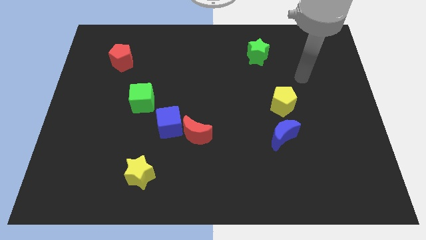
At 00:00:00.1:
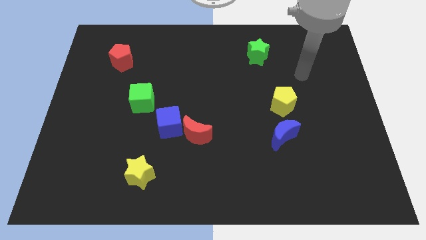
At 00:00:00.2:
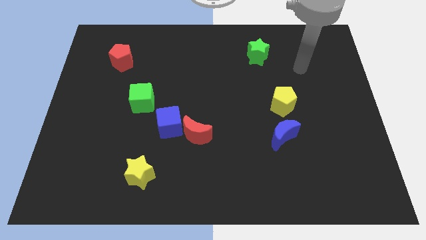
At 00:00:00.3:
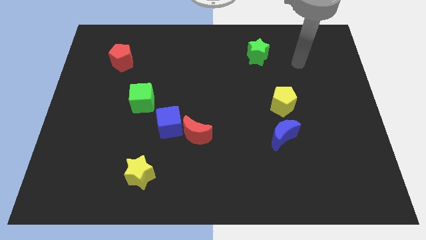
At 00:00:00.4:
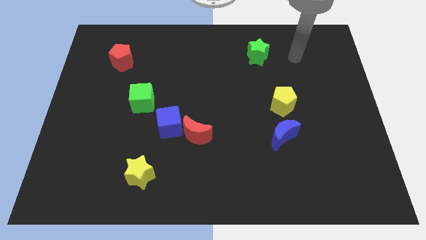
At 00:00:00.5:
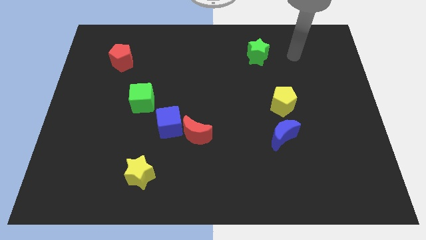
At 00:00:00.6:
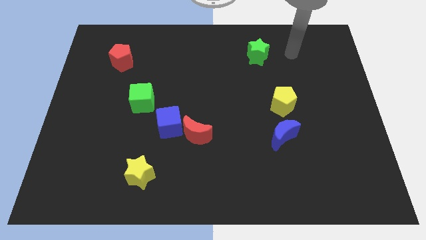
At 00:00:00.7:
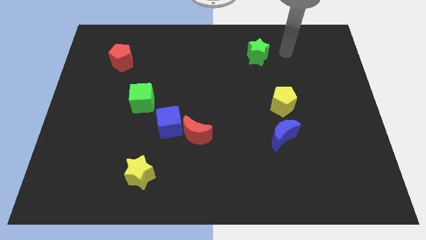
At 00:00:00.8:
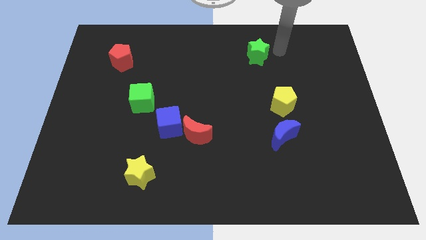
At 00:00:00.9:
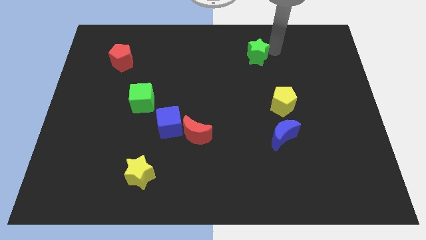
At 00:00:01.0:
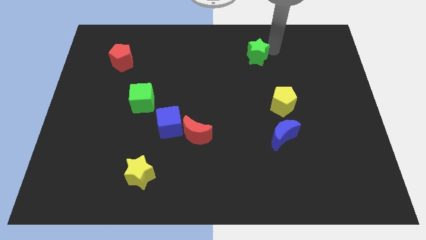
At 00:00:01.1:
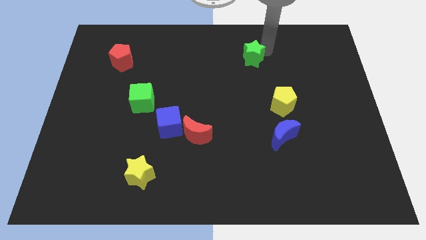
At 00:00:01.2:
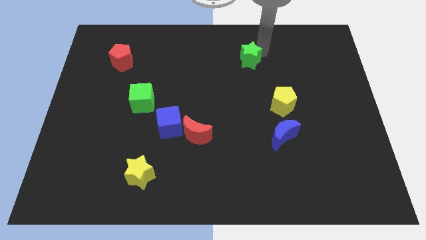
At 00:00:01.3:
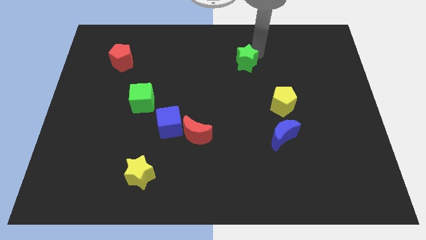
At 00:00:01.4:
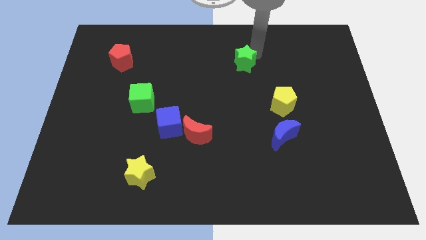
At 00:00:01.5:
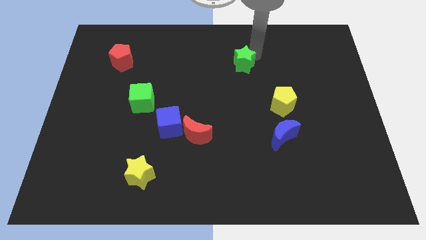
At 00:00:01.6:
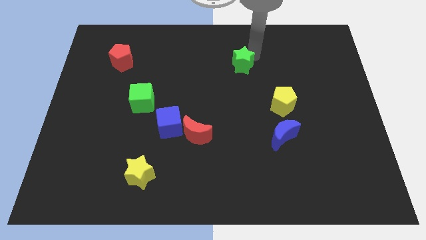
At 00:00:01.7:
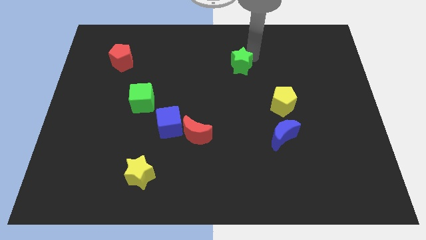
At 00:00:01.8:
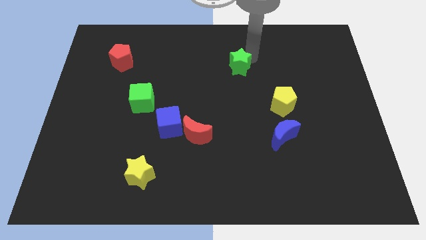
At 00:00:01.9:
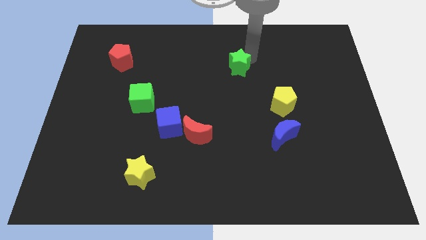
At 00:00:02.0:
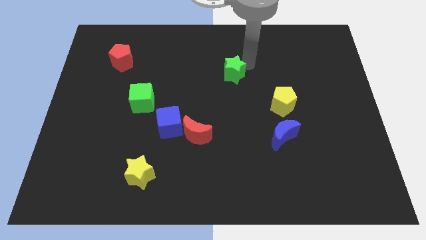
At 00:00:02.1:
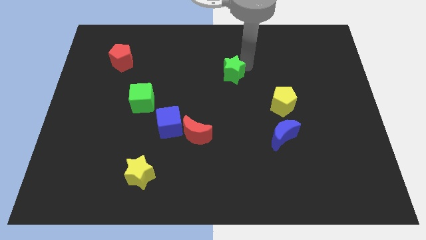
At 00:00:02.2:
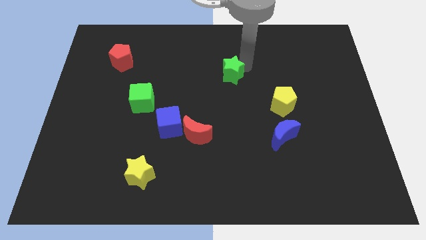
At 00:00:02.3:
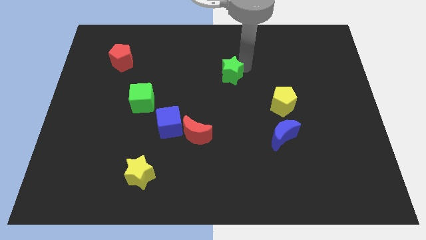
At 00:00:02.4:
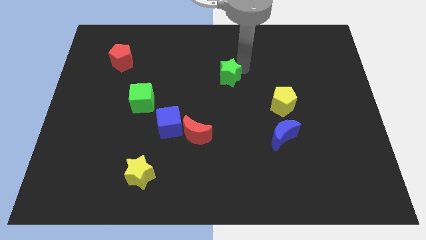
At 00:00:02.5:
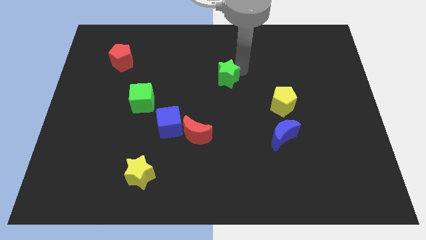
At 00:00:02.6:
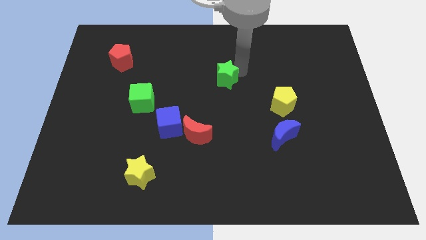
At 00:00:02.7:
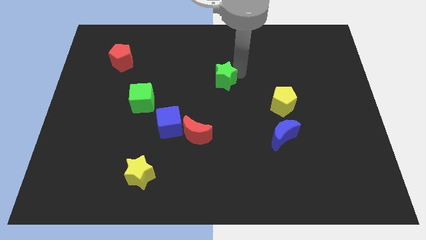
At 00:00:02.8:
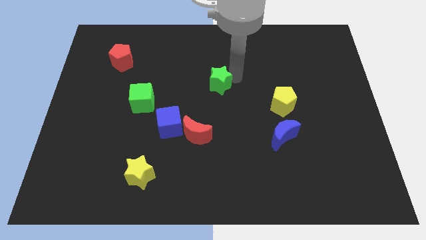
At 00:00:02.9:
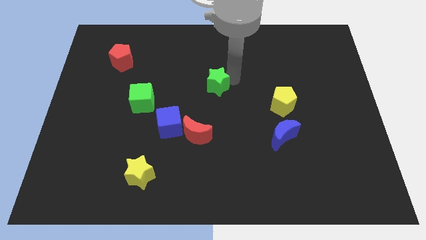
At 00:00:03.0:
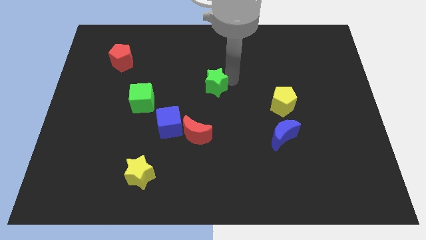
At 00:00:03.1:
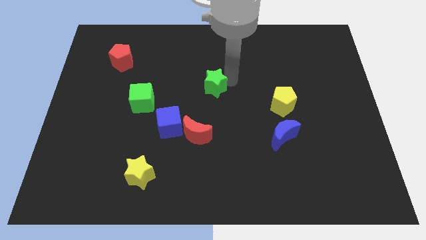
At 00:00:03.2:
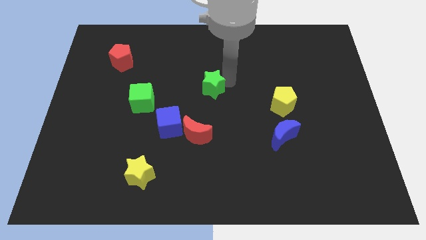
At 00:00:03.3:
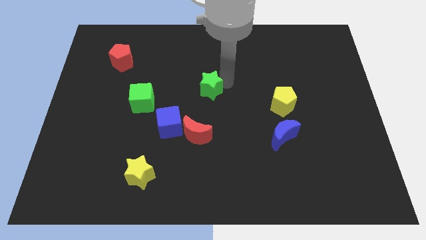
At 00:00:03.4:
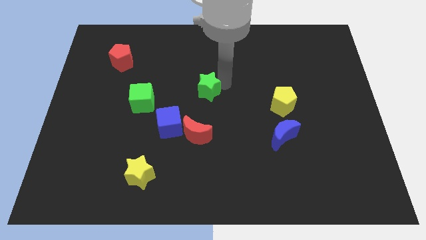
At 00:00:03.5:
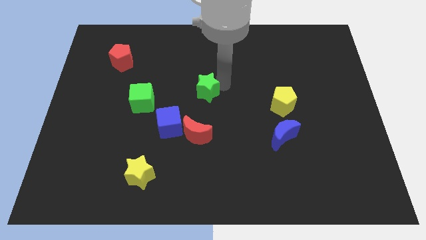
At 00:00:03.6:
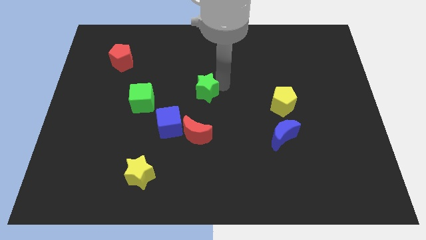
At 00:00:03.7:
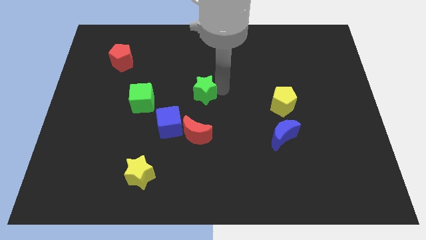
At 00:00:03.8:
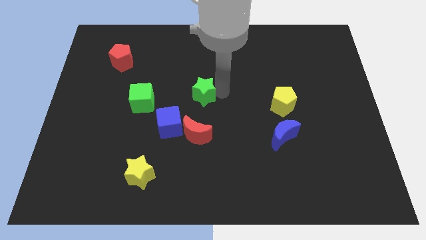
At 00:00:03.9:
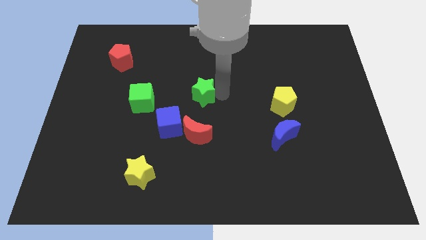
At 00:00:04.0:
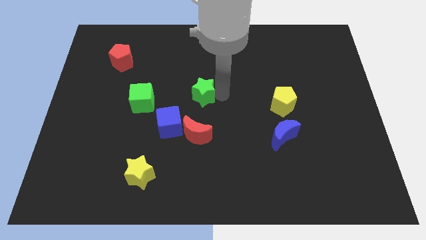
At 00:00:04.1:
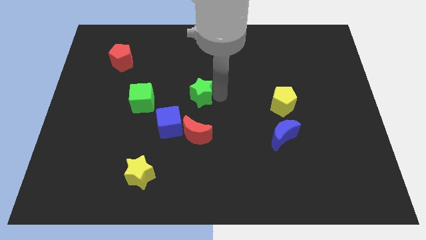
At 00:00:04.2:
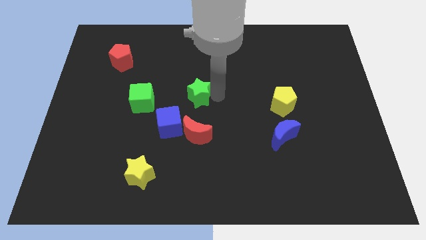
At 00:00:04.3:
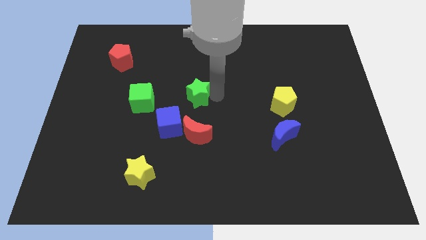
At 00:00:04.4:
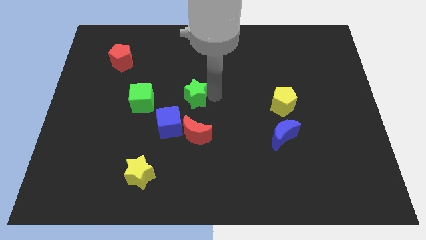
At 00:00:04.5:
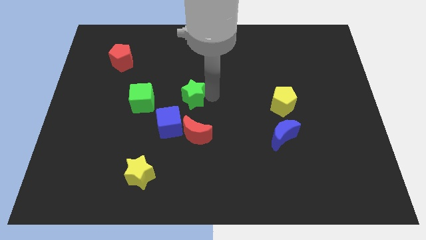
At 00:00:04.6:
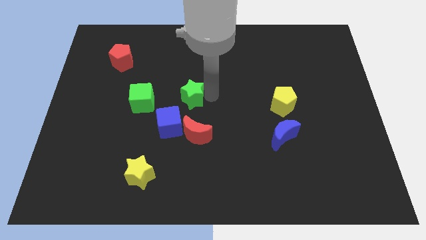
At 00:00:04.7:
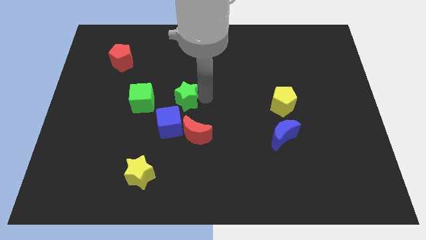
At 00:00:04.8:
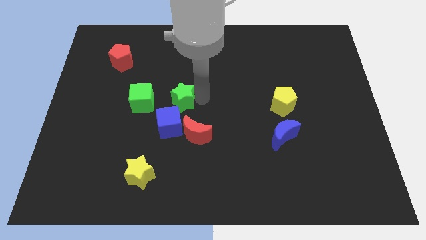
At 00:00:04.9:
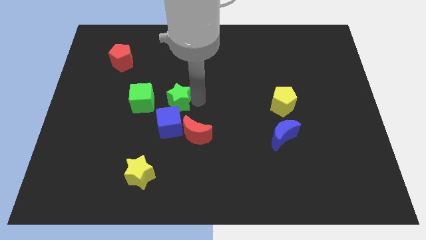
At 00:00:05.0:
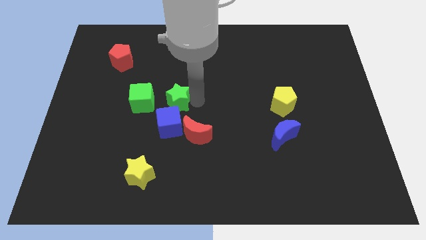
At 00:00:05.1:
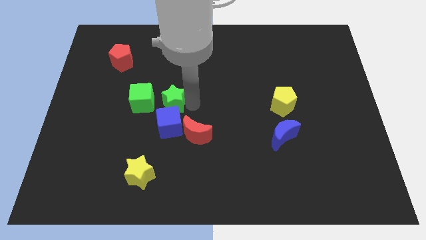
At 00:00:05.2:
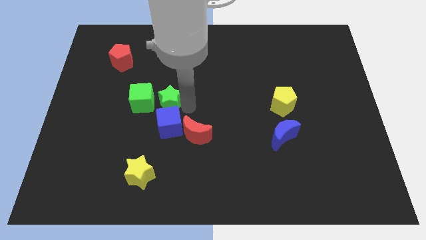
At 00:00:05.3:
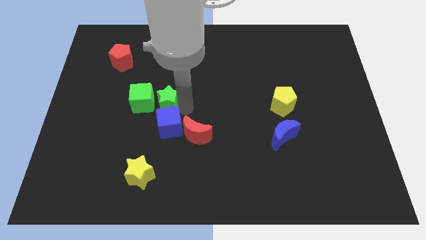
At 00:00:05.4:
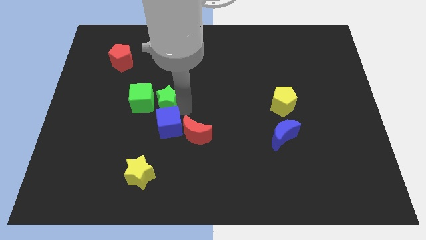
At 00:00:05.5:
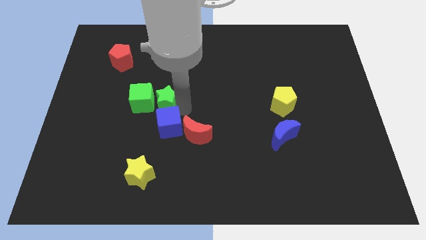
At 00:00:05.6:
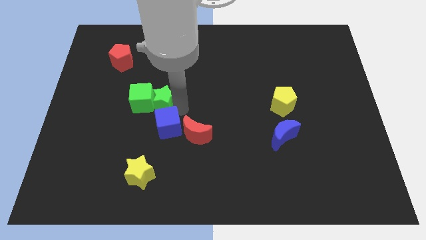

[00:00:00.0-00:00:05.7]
move the green star next to the green cube

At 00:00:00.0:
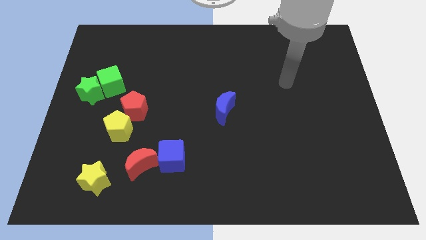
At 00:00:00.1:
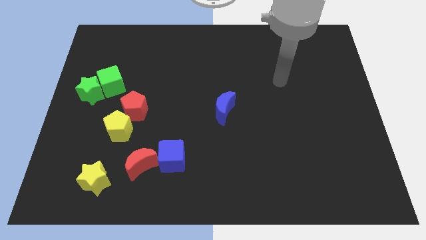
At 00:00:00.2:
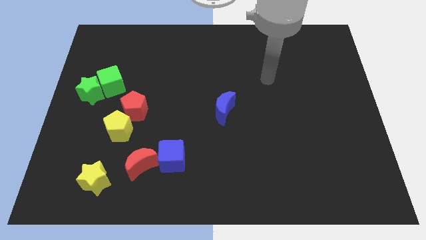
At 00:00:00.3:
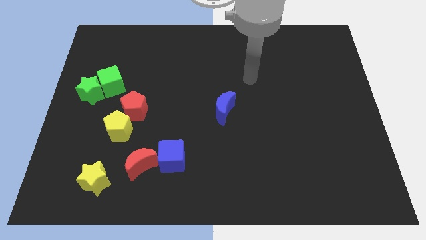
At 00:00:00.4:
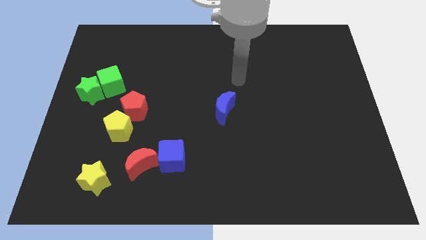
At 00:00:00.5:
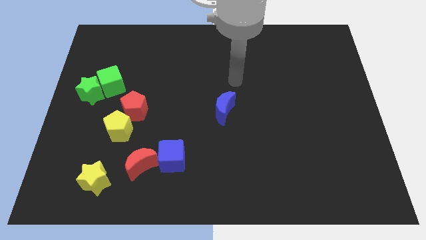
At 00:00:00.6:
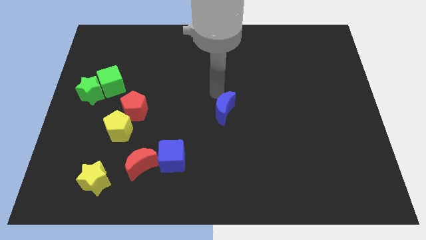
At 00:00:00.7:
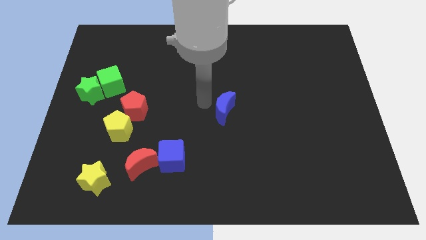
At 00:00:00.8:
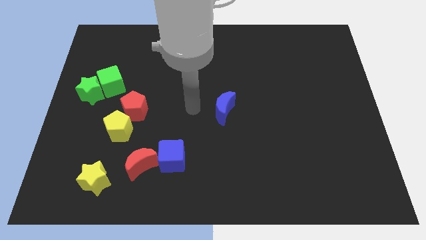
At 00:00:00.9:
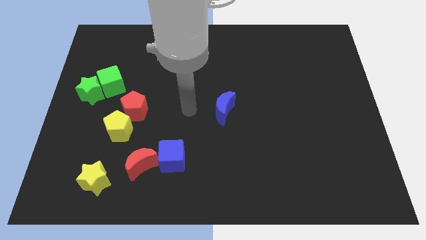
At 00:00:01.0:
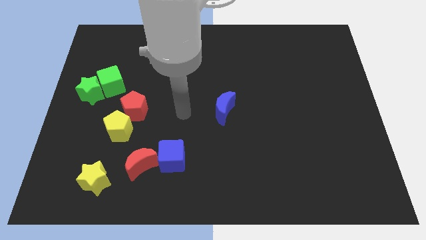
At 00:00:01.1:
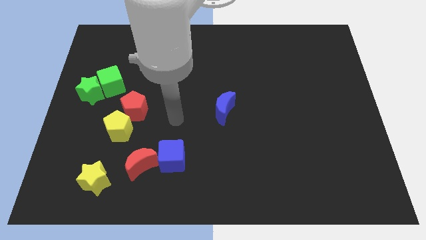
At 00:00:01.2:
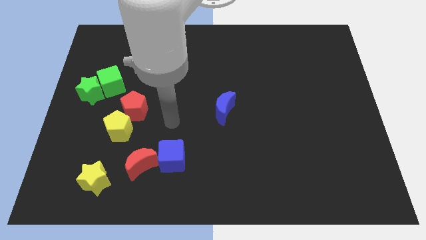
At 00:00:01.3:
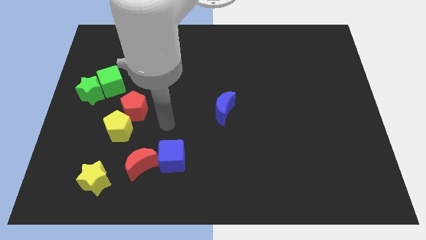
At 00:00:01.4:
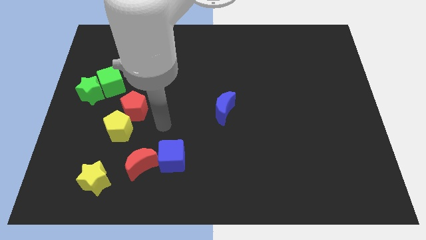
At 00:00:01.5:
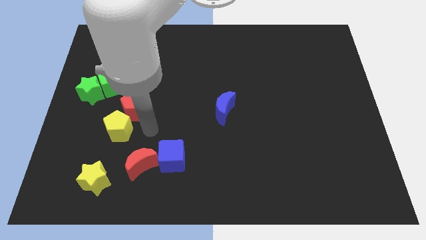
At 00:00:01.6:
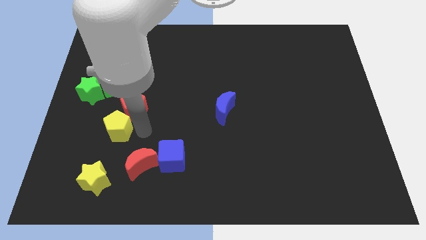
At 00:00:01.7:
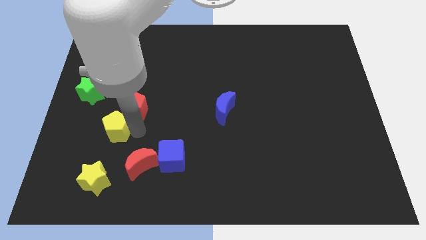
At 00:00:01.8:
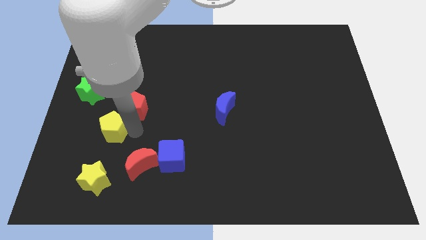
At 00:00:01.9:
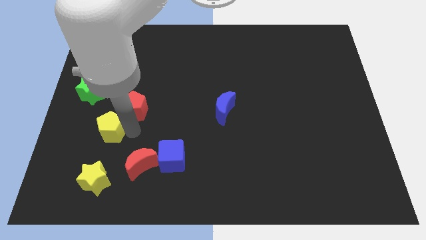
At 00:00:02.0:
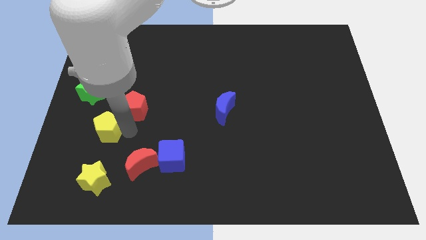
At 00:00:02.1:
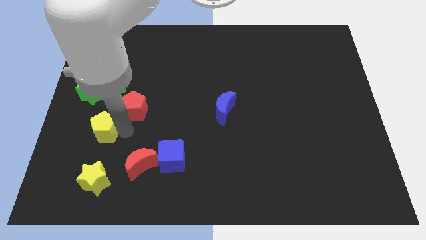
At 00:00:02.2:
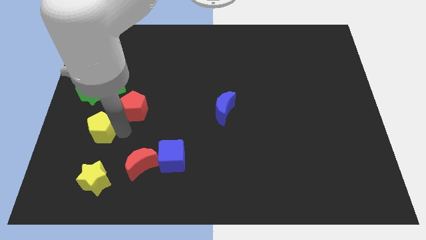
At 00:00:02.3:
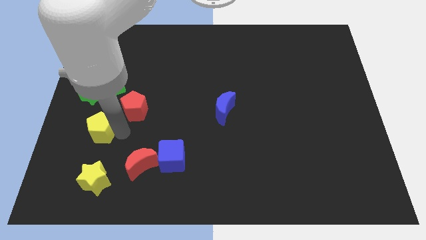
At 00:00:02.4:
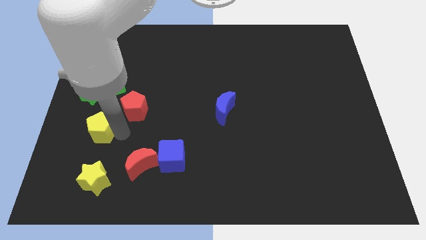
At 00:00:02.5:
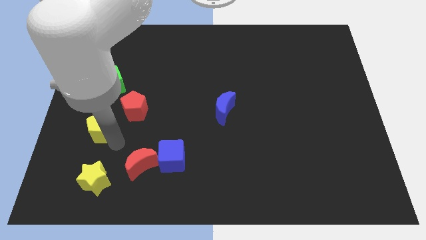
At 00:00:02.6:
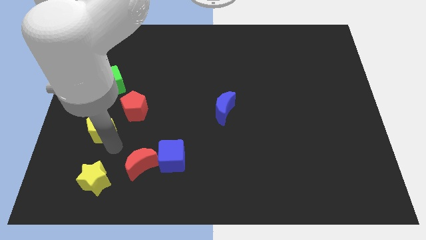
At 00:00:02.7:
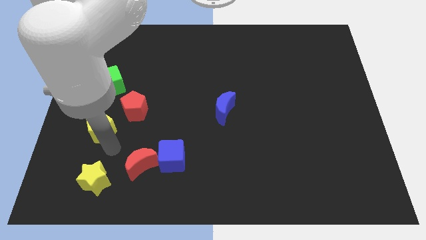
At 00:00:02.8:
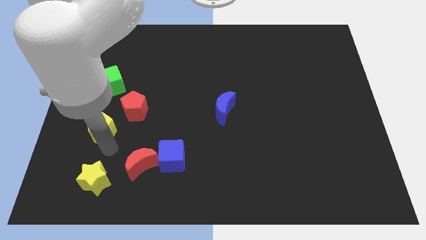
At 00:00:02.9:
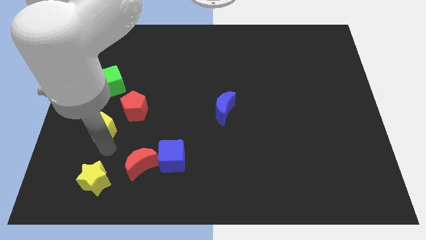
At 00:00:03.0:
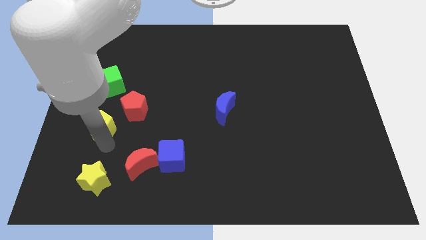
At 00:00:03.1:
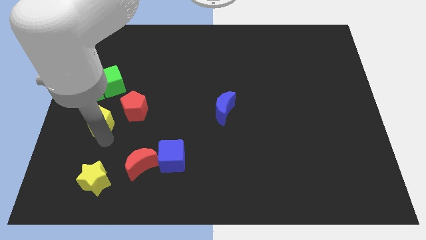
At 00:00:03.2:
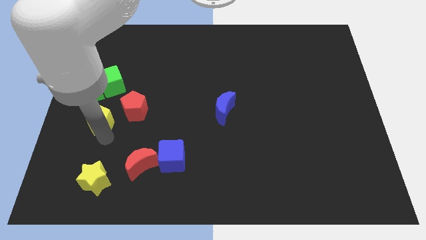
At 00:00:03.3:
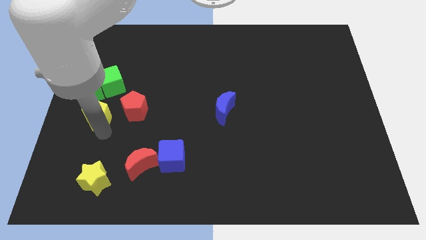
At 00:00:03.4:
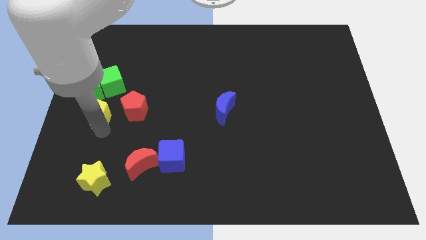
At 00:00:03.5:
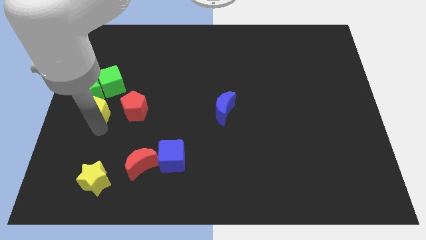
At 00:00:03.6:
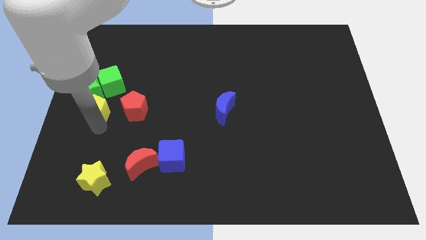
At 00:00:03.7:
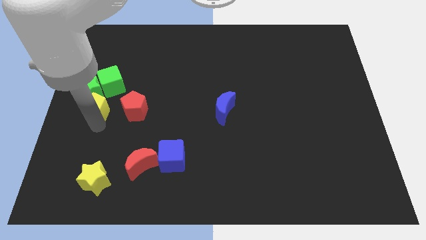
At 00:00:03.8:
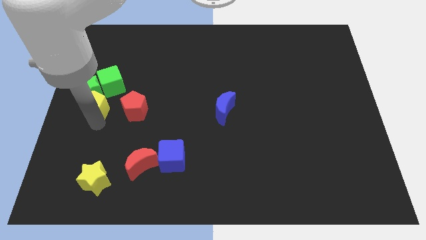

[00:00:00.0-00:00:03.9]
put the yellow pentagon towards the green star
